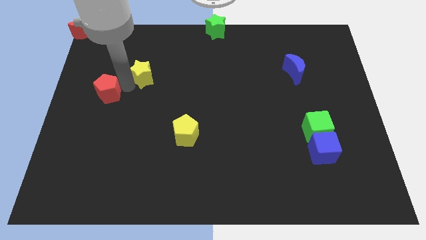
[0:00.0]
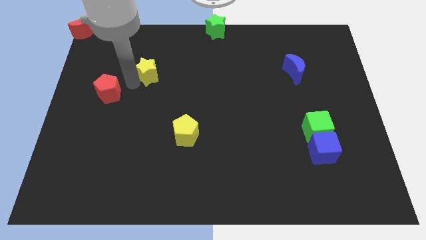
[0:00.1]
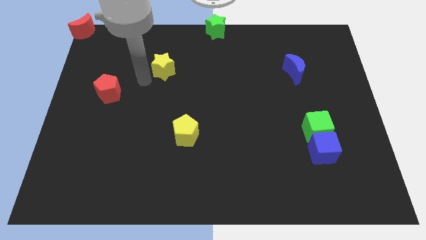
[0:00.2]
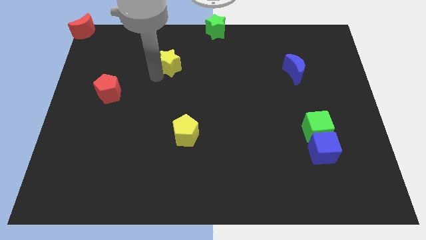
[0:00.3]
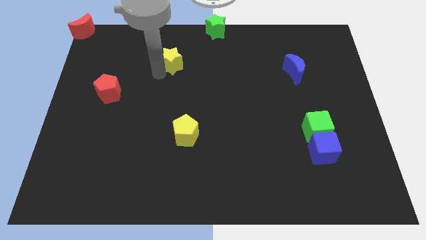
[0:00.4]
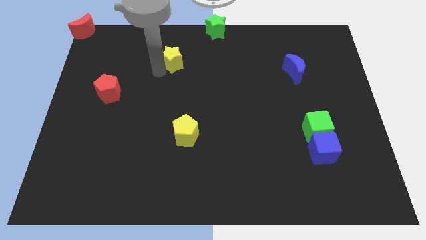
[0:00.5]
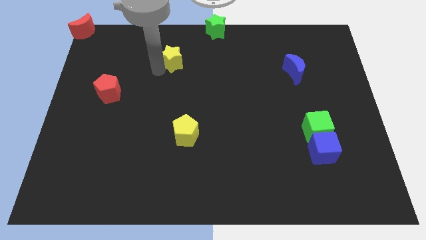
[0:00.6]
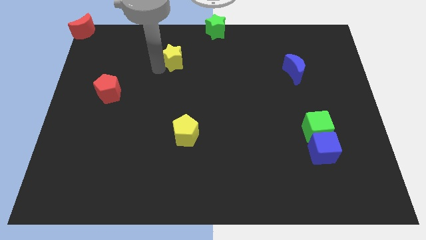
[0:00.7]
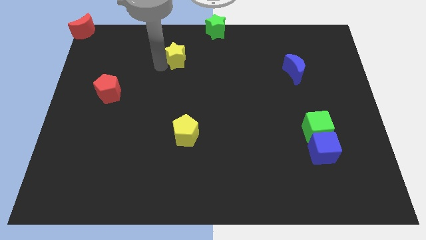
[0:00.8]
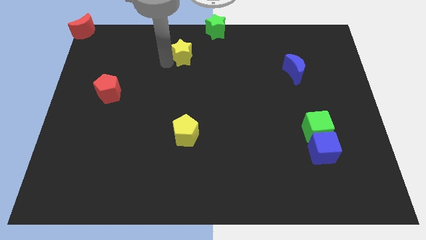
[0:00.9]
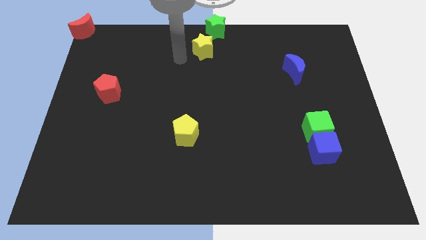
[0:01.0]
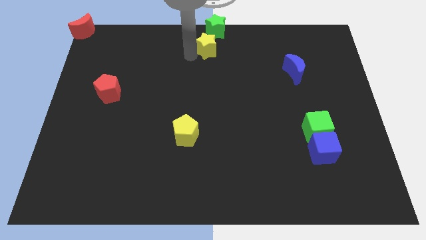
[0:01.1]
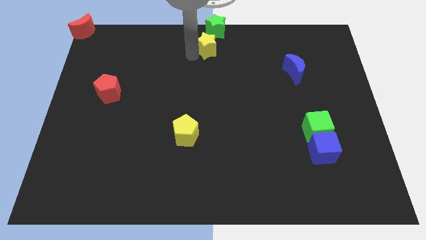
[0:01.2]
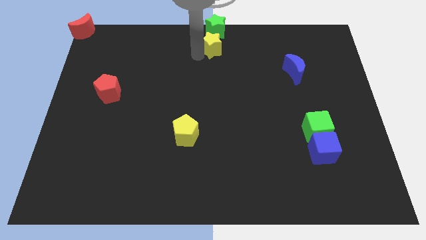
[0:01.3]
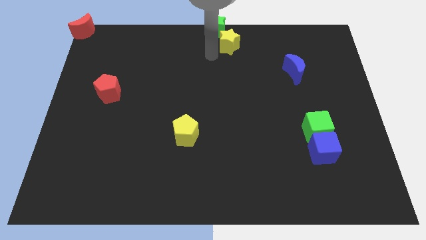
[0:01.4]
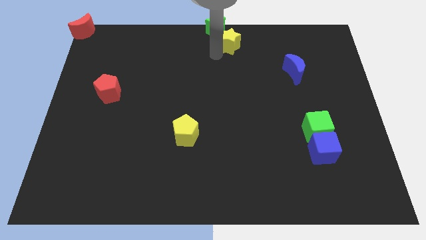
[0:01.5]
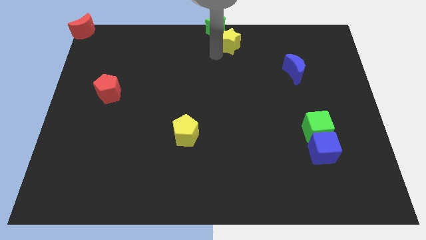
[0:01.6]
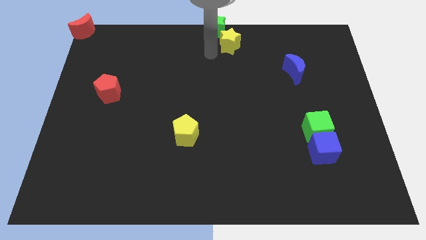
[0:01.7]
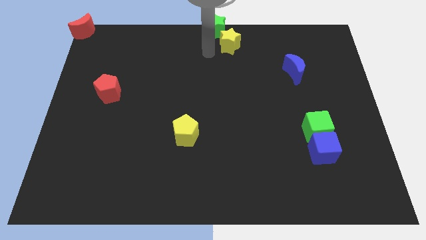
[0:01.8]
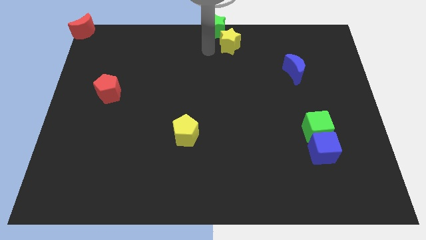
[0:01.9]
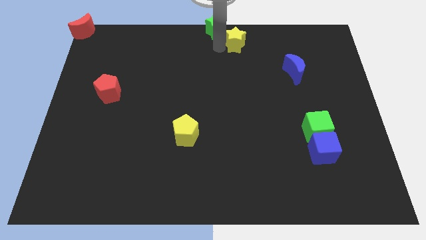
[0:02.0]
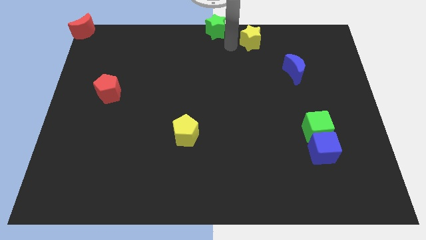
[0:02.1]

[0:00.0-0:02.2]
push the yellow star to the right bottom side of the green star

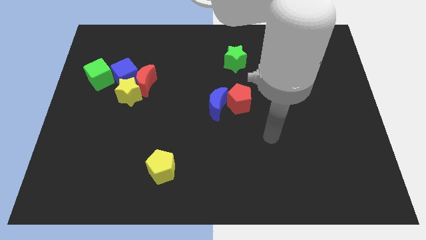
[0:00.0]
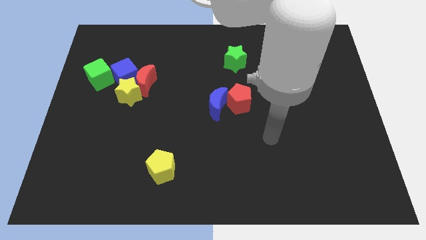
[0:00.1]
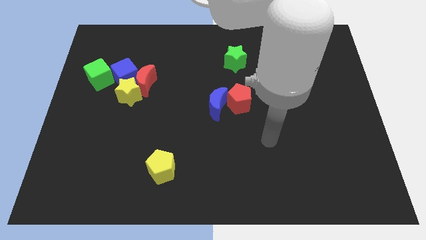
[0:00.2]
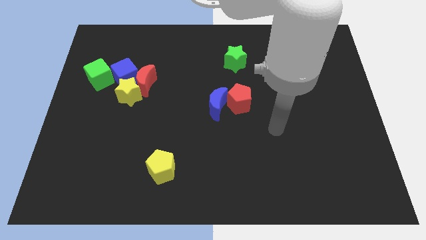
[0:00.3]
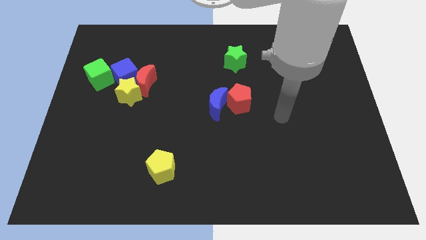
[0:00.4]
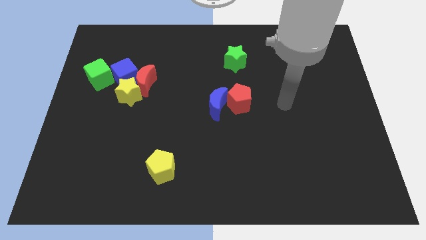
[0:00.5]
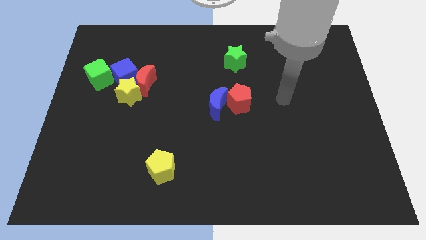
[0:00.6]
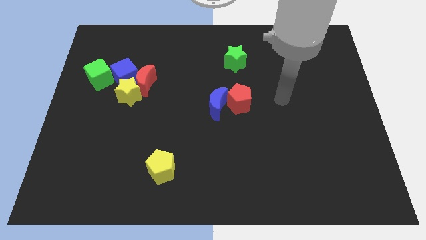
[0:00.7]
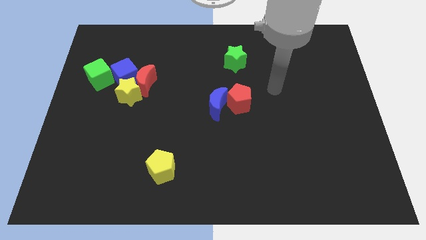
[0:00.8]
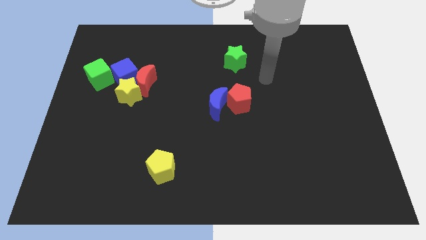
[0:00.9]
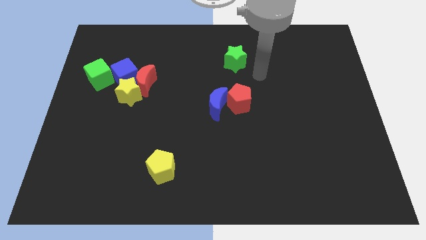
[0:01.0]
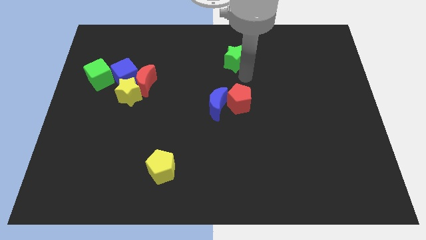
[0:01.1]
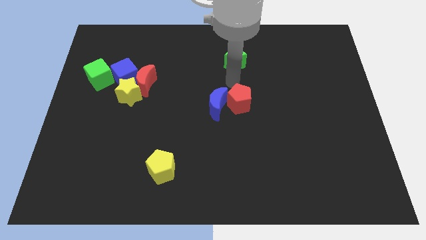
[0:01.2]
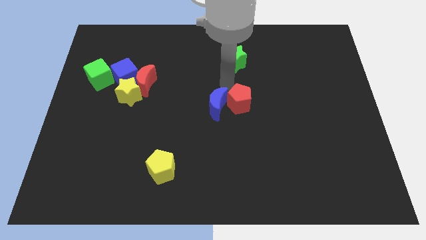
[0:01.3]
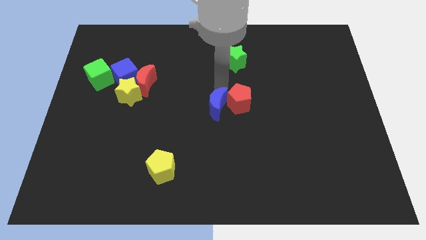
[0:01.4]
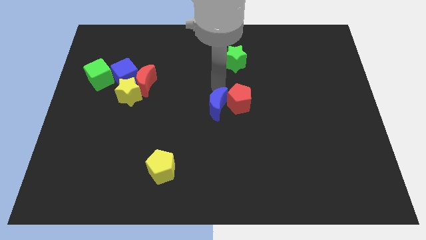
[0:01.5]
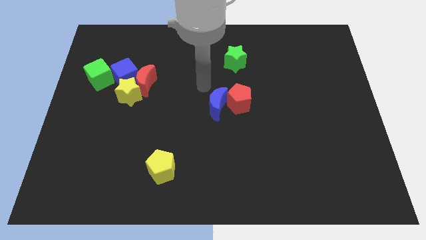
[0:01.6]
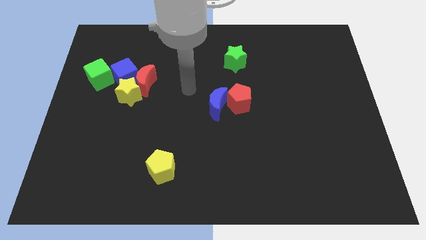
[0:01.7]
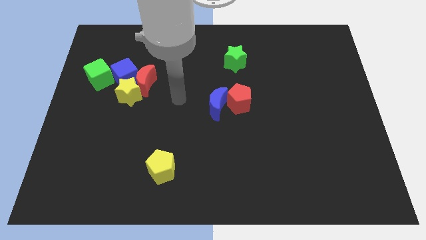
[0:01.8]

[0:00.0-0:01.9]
point your arm close to the left of the blue moon

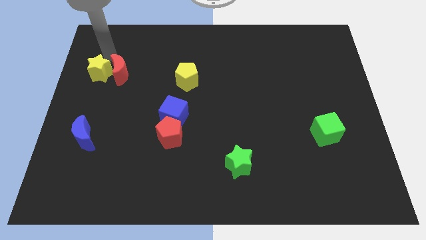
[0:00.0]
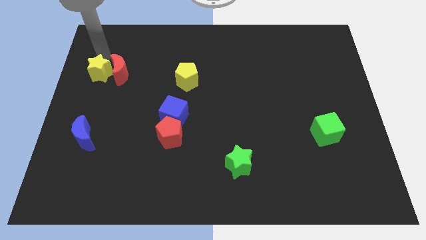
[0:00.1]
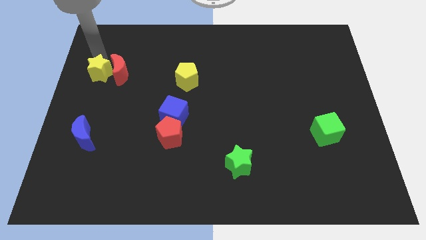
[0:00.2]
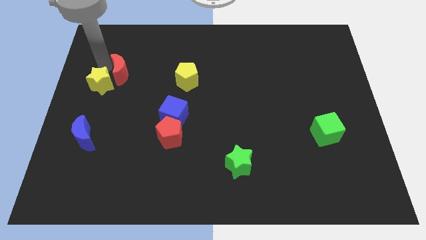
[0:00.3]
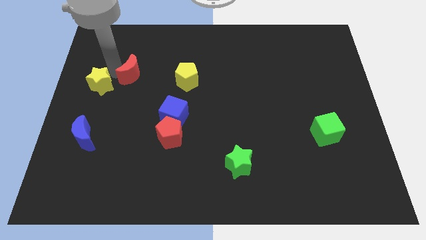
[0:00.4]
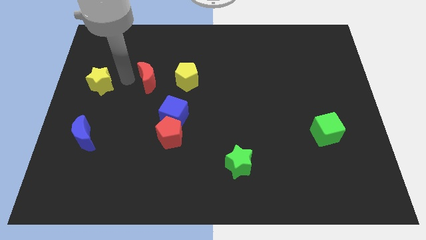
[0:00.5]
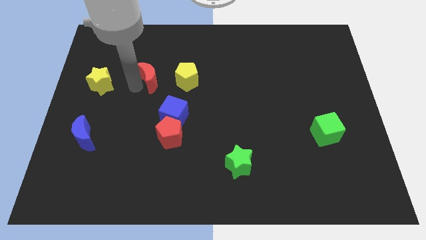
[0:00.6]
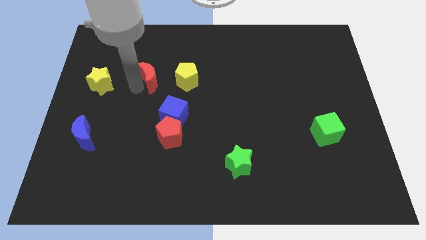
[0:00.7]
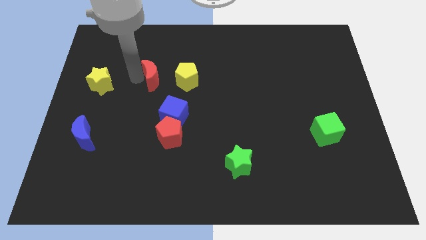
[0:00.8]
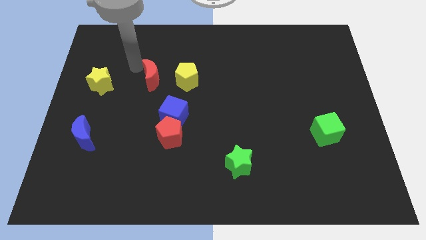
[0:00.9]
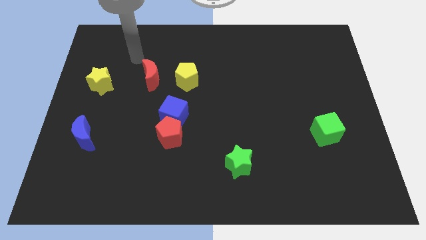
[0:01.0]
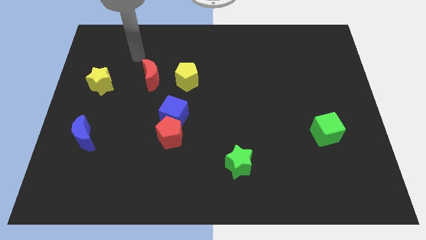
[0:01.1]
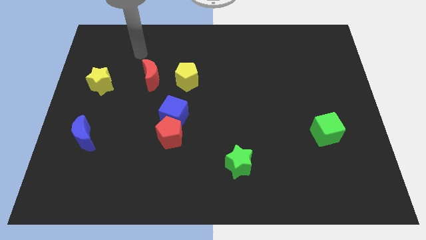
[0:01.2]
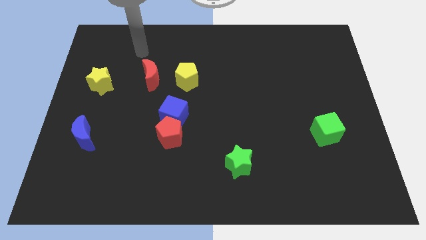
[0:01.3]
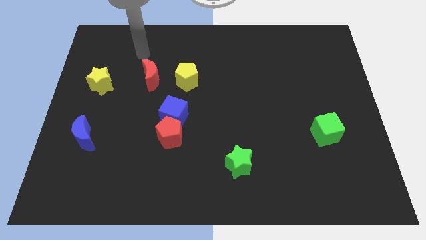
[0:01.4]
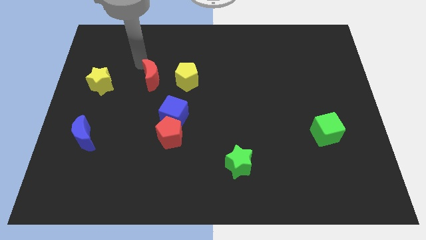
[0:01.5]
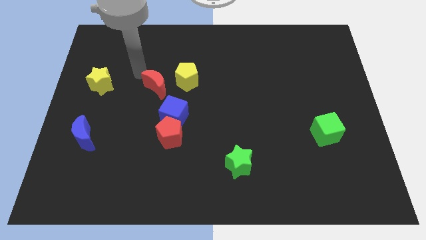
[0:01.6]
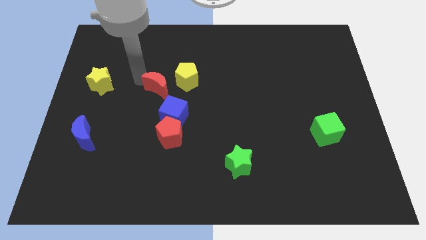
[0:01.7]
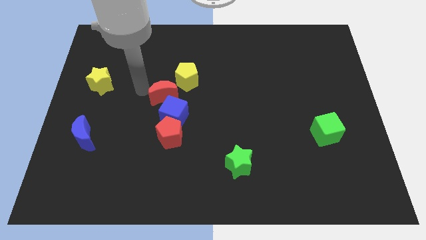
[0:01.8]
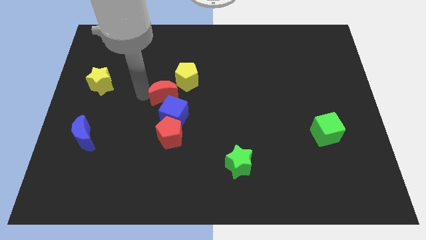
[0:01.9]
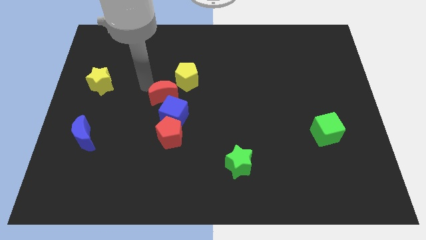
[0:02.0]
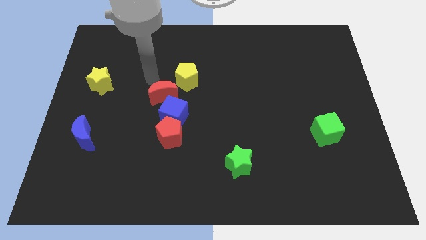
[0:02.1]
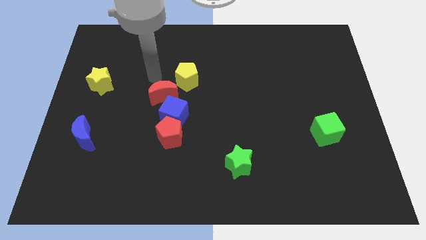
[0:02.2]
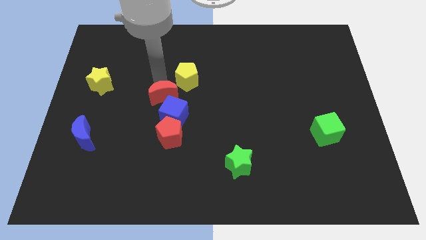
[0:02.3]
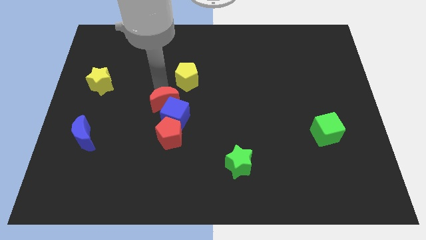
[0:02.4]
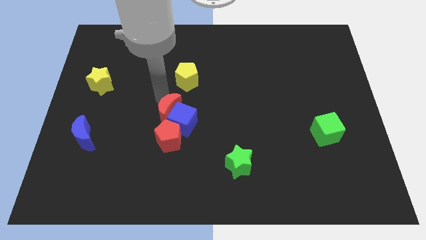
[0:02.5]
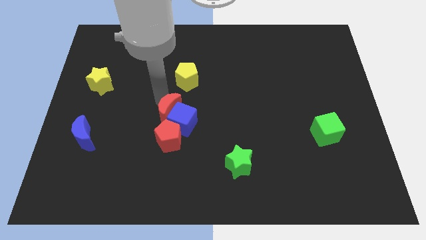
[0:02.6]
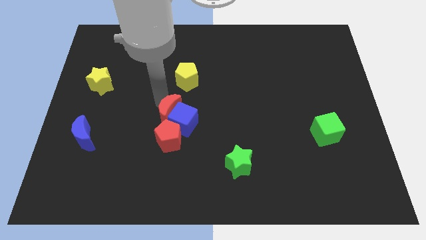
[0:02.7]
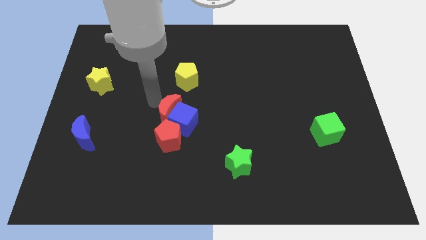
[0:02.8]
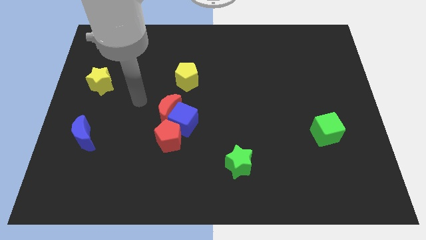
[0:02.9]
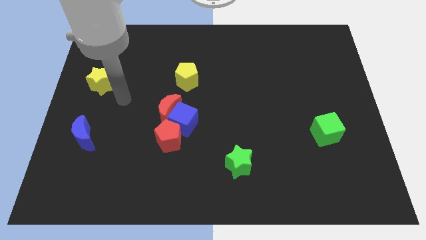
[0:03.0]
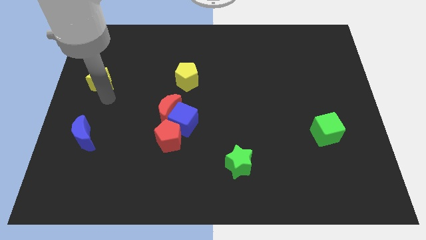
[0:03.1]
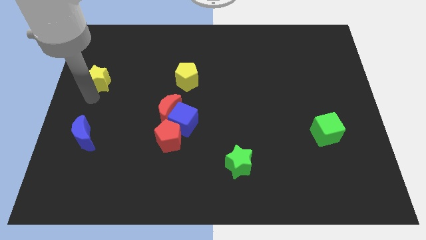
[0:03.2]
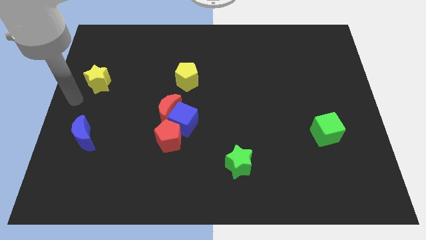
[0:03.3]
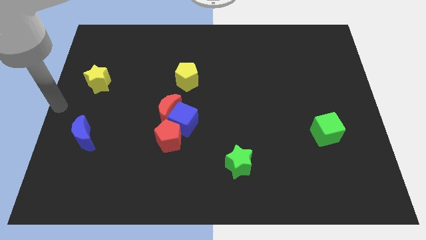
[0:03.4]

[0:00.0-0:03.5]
put the red moon on the top left of the blue cube

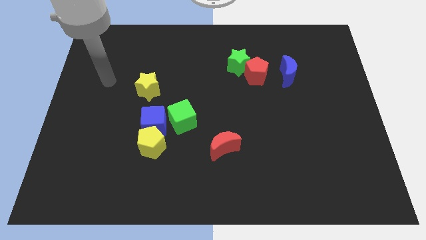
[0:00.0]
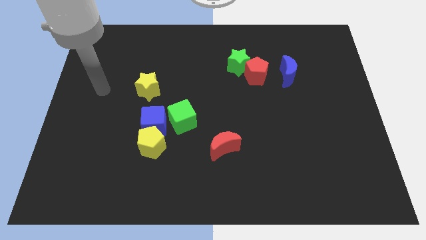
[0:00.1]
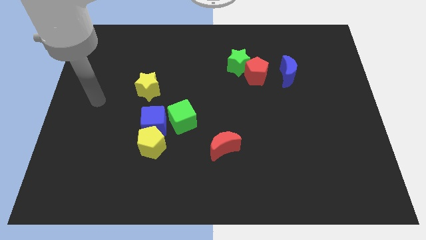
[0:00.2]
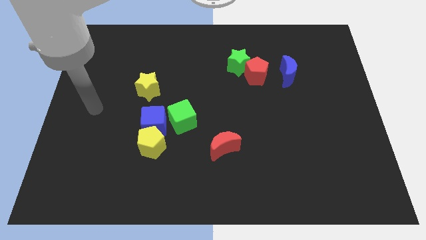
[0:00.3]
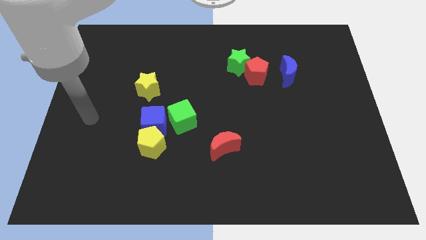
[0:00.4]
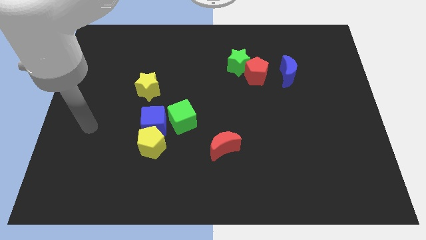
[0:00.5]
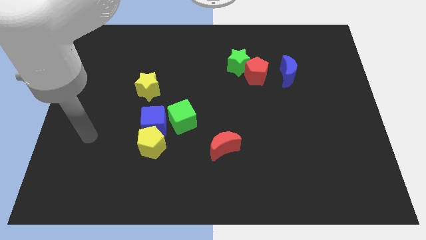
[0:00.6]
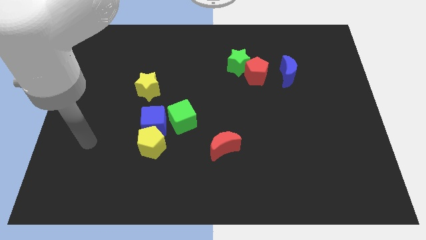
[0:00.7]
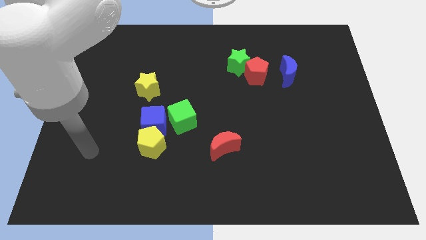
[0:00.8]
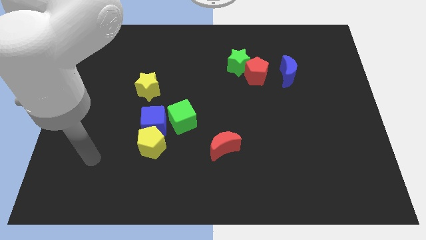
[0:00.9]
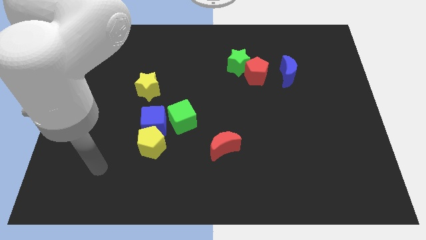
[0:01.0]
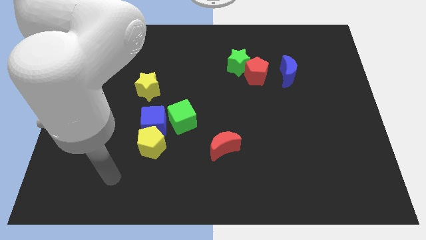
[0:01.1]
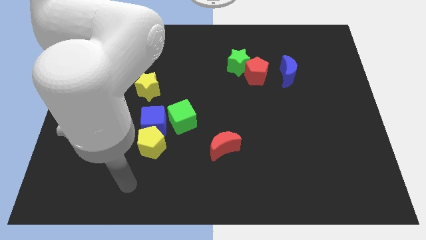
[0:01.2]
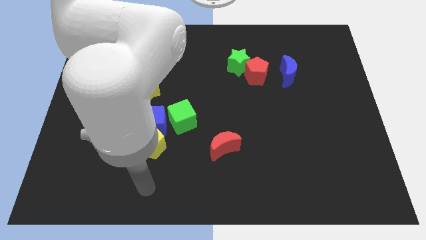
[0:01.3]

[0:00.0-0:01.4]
push your hand vertically below the yellow pentagon
